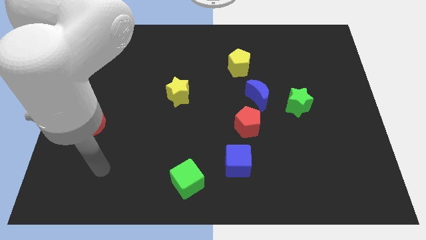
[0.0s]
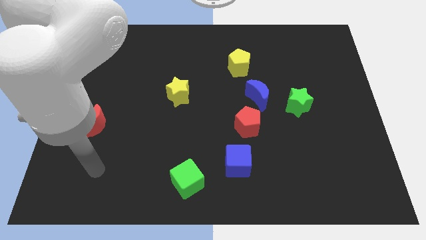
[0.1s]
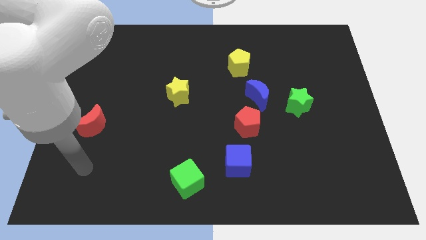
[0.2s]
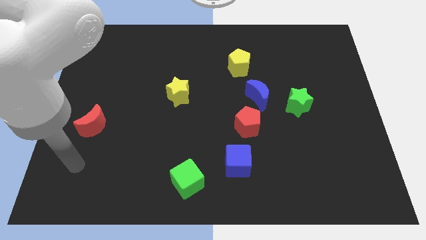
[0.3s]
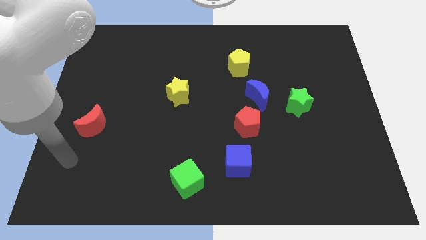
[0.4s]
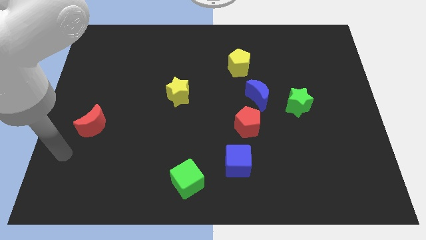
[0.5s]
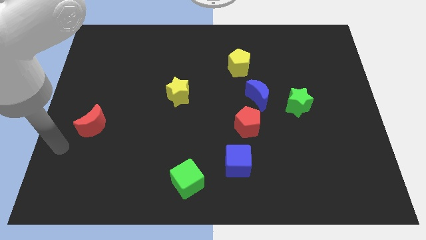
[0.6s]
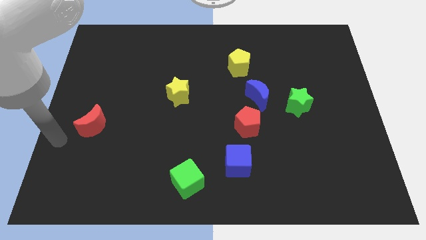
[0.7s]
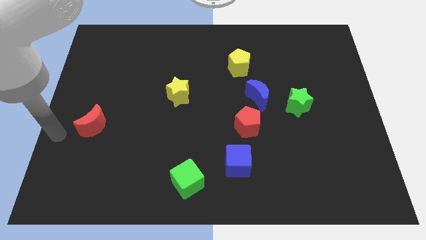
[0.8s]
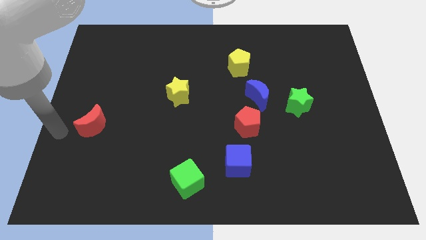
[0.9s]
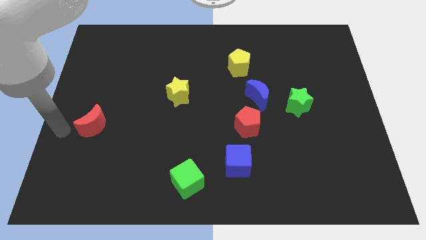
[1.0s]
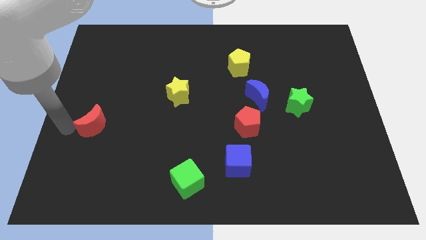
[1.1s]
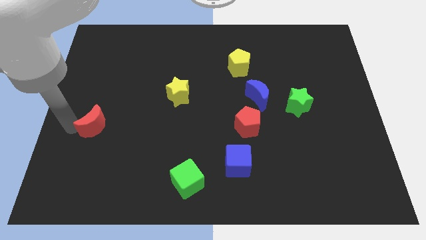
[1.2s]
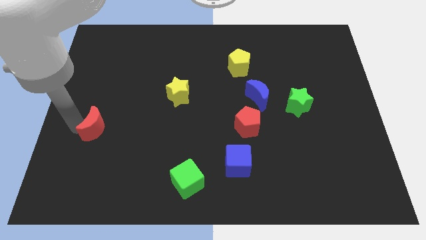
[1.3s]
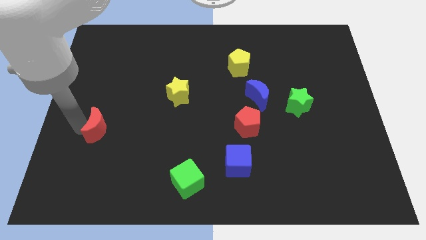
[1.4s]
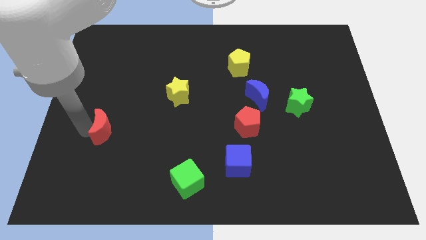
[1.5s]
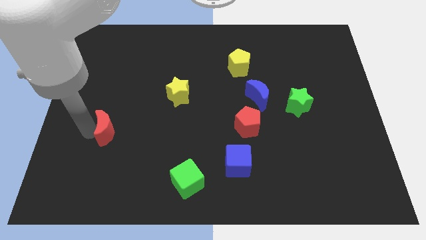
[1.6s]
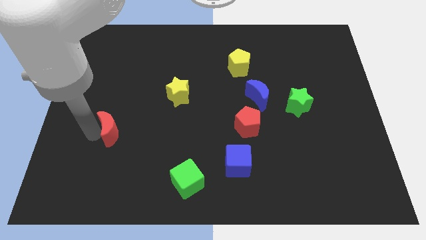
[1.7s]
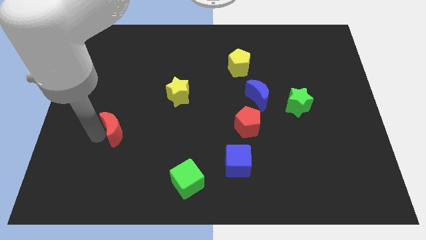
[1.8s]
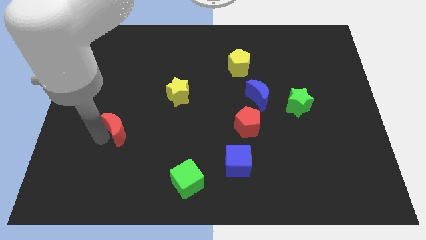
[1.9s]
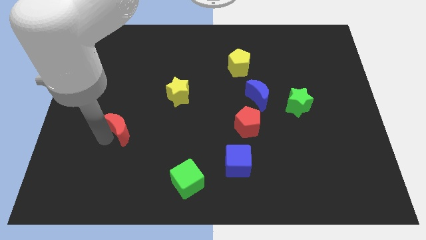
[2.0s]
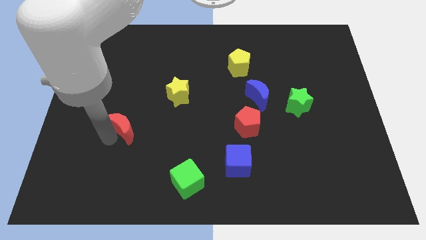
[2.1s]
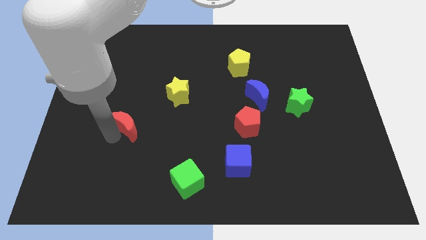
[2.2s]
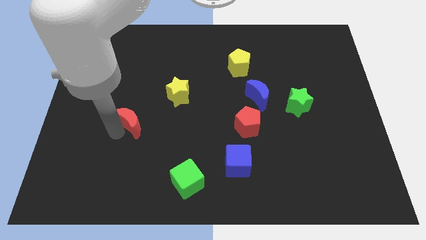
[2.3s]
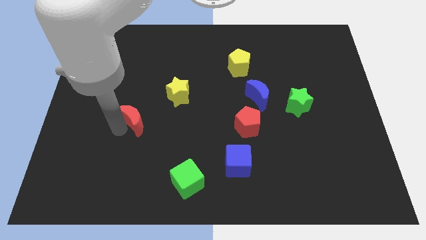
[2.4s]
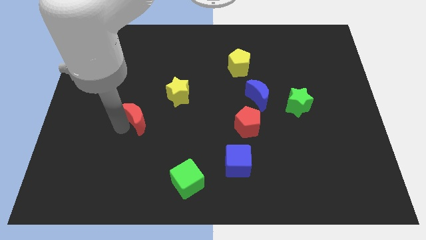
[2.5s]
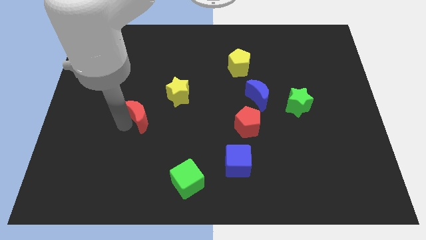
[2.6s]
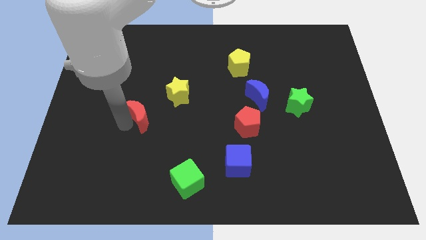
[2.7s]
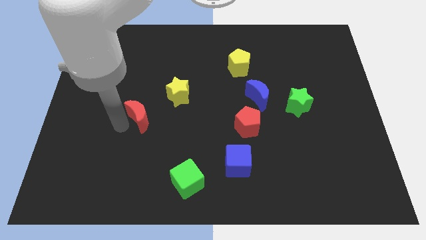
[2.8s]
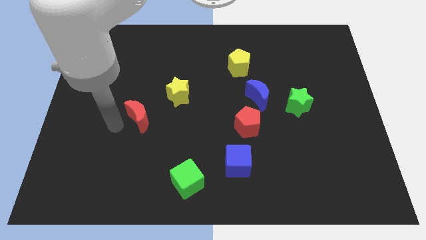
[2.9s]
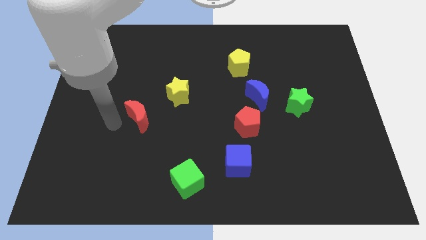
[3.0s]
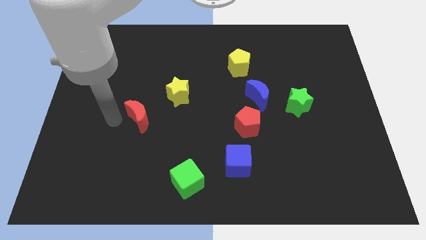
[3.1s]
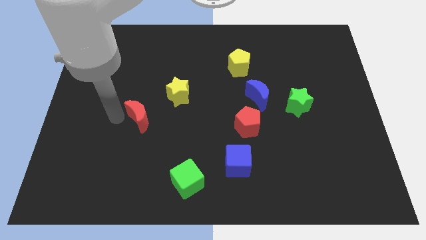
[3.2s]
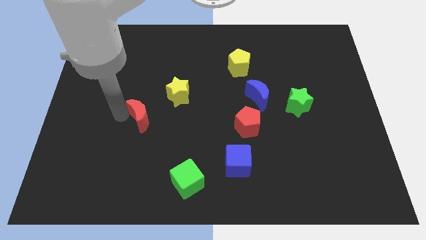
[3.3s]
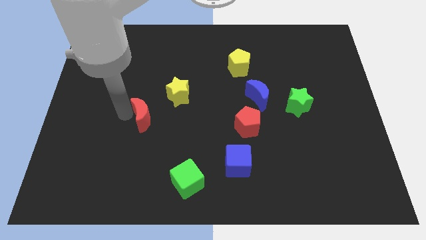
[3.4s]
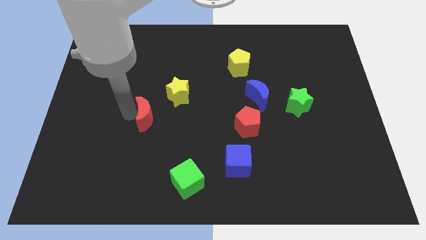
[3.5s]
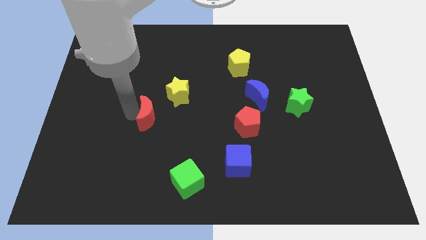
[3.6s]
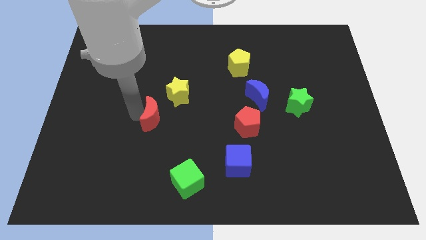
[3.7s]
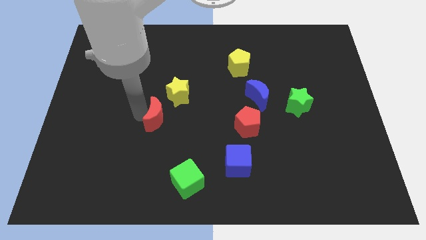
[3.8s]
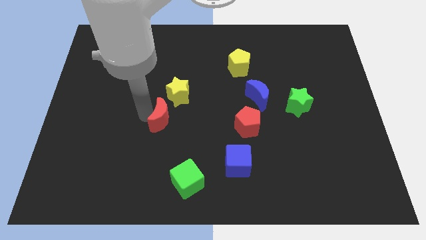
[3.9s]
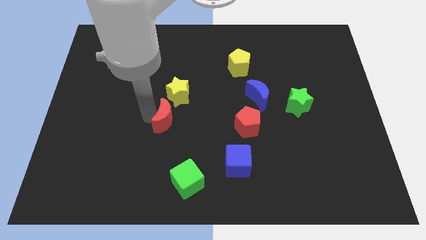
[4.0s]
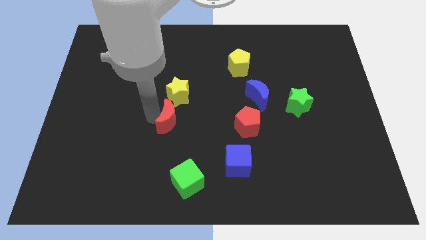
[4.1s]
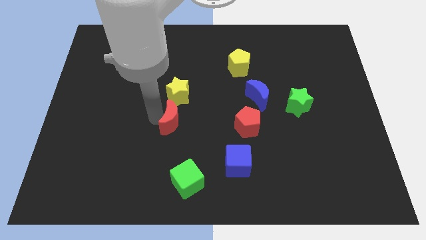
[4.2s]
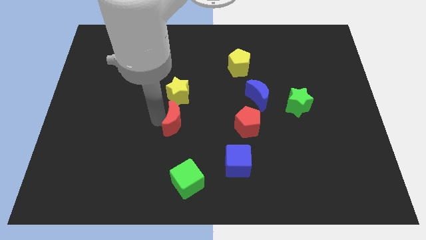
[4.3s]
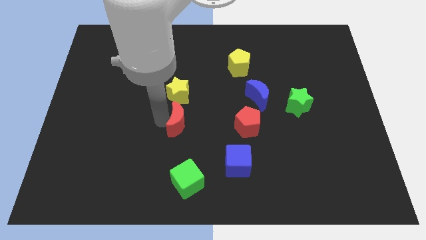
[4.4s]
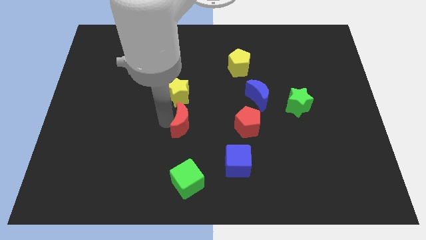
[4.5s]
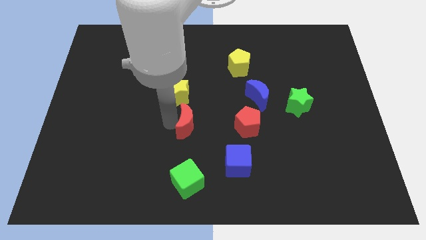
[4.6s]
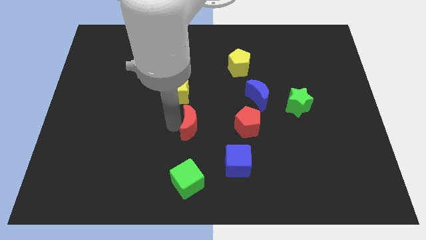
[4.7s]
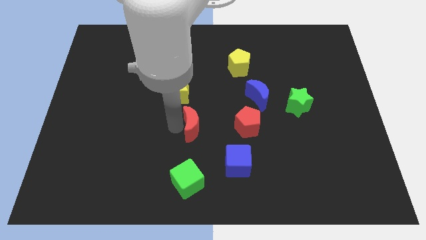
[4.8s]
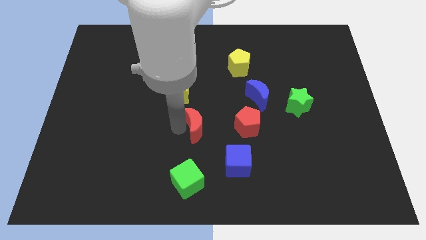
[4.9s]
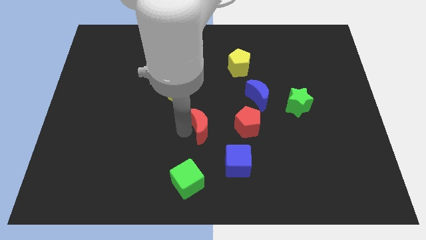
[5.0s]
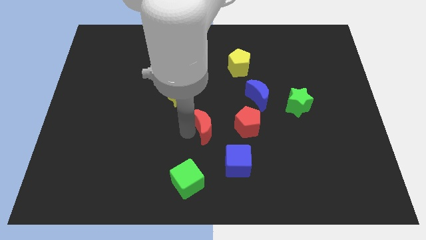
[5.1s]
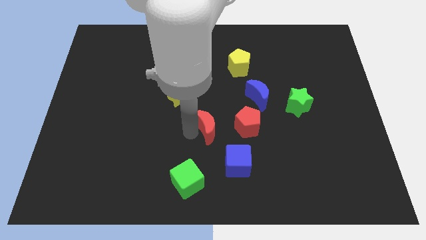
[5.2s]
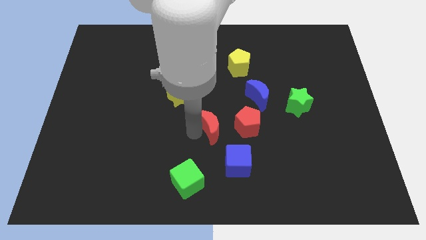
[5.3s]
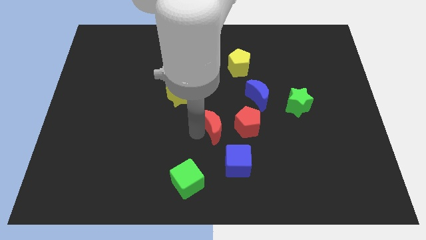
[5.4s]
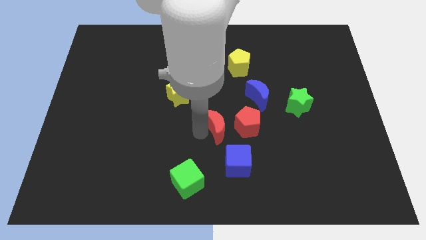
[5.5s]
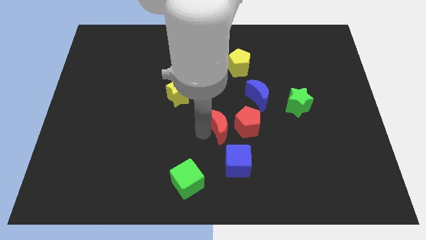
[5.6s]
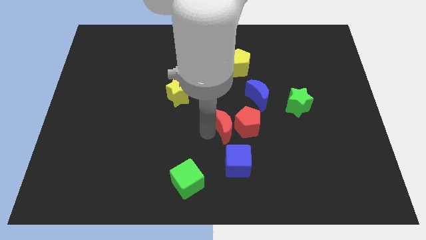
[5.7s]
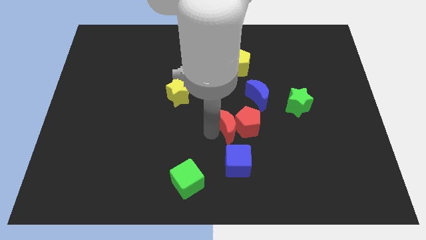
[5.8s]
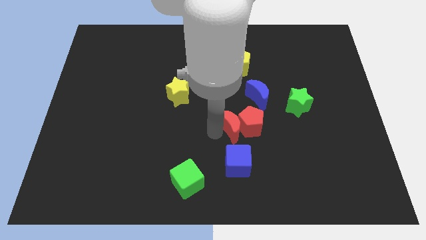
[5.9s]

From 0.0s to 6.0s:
put the red moon next to the red pentagon

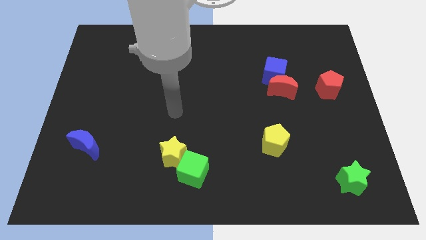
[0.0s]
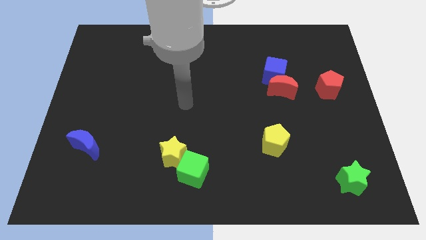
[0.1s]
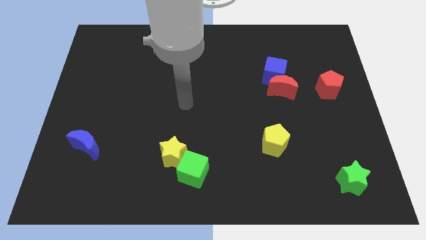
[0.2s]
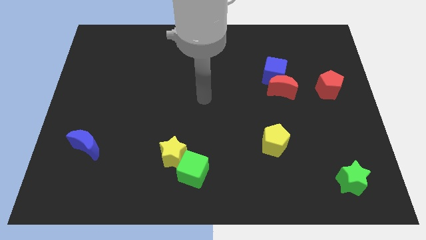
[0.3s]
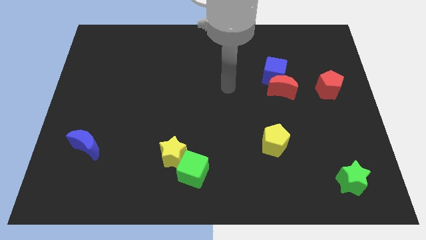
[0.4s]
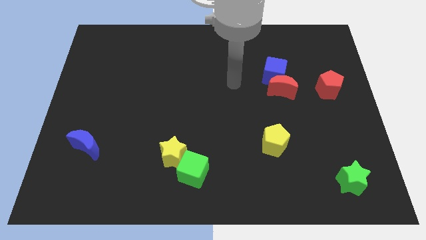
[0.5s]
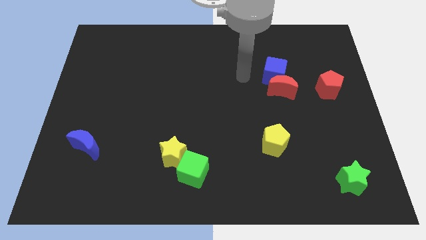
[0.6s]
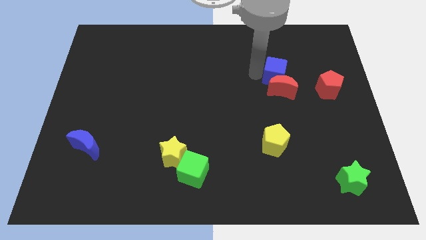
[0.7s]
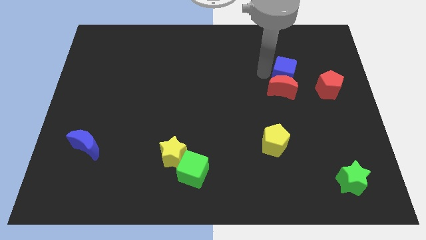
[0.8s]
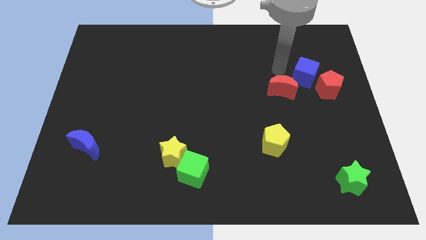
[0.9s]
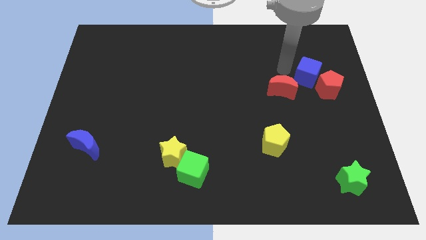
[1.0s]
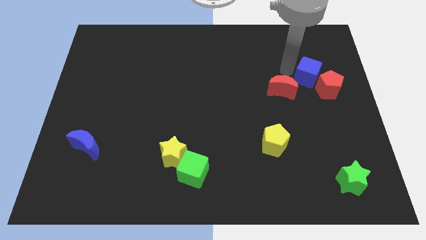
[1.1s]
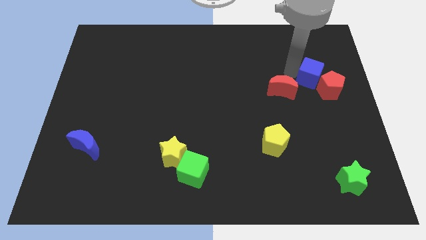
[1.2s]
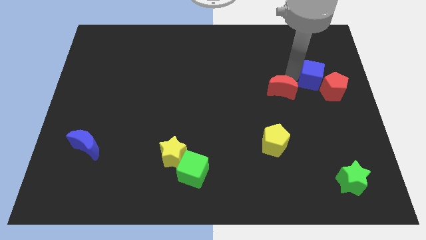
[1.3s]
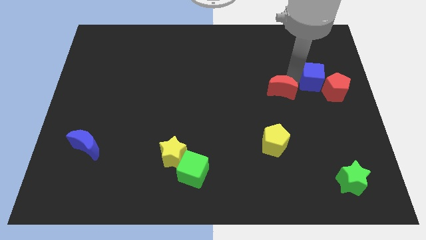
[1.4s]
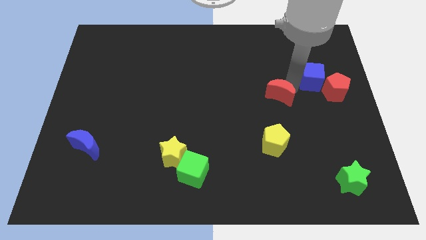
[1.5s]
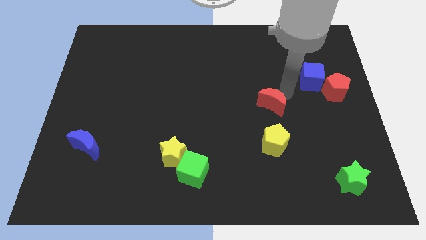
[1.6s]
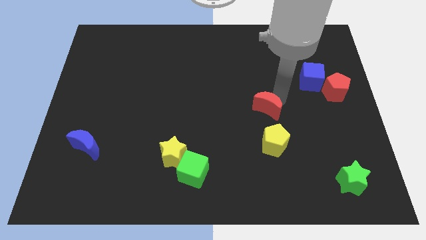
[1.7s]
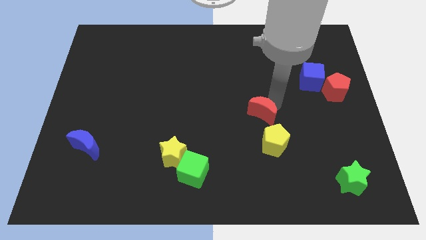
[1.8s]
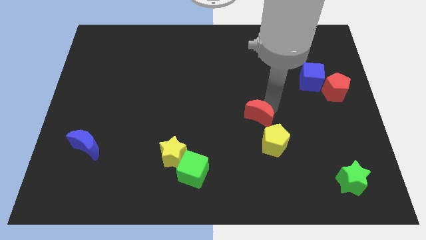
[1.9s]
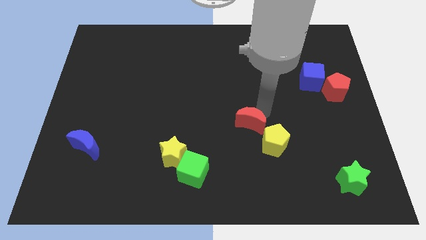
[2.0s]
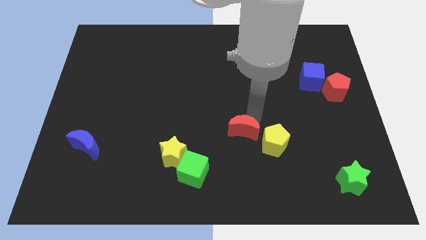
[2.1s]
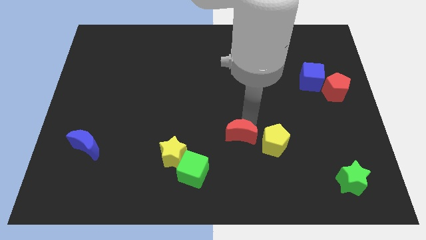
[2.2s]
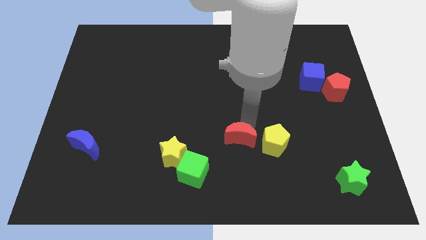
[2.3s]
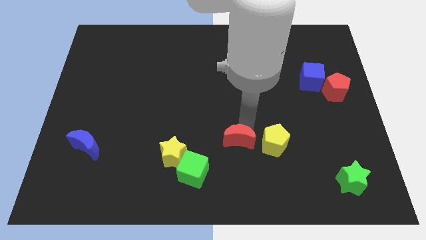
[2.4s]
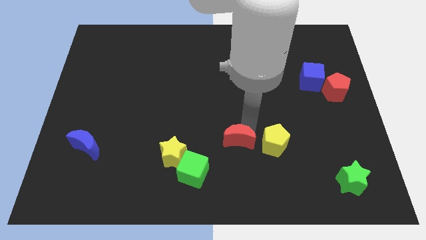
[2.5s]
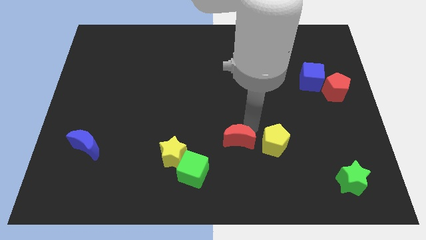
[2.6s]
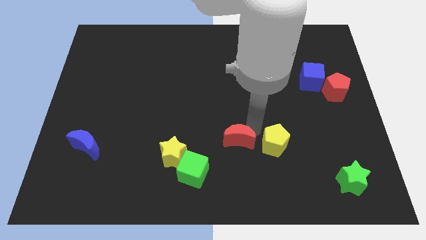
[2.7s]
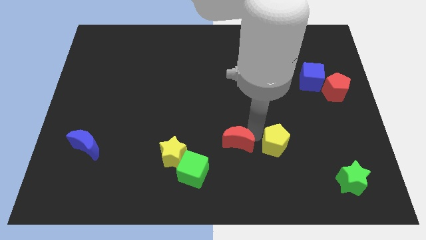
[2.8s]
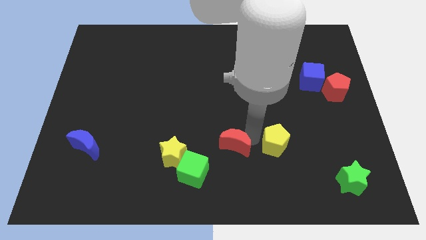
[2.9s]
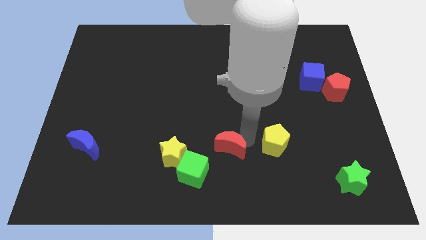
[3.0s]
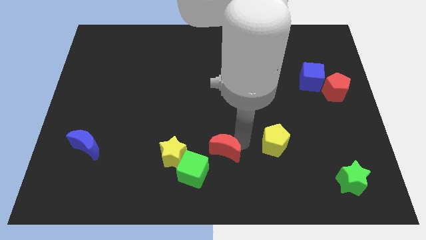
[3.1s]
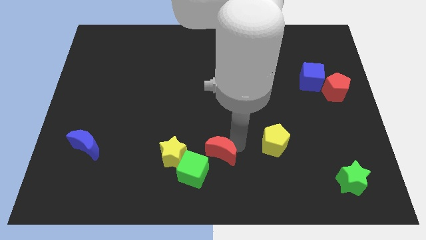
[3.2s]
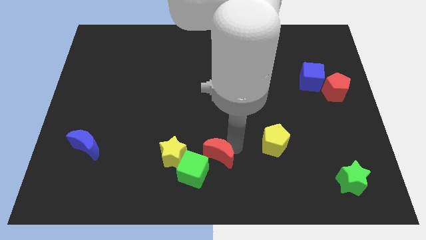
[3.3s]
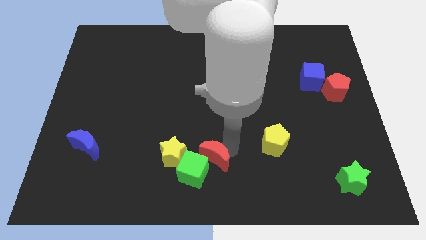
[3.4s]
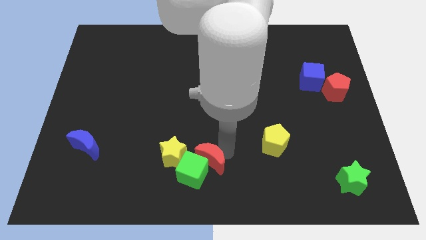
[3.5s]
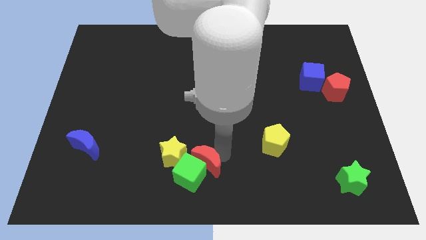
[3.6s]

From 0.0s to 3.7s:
move the red moon to the green cube
